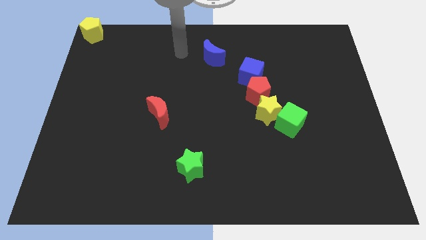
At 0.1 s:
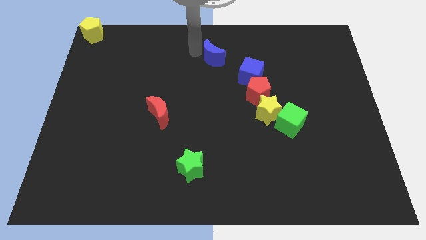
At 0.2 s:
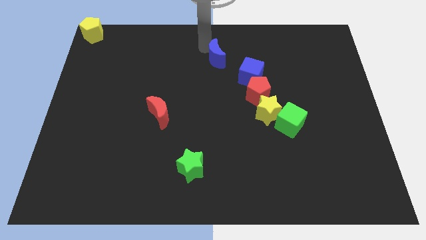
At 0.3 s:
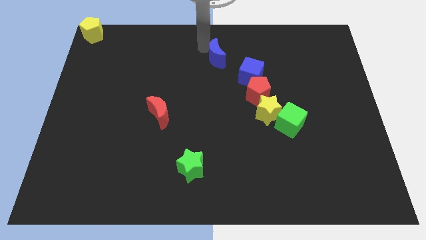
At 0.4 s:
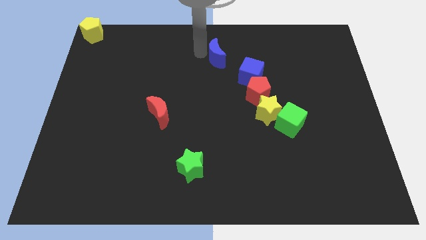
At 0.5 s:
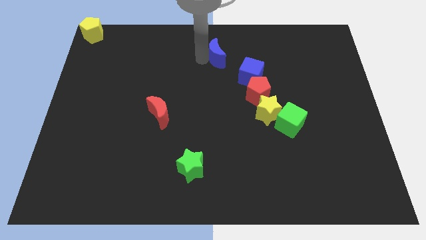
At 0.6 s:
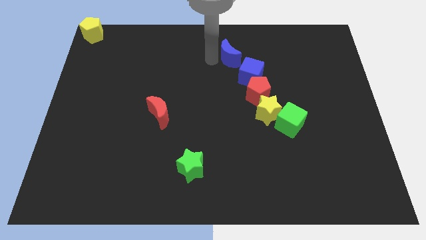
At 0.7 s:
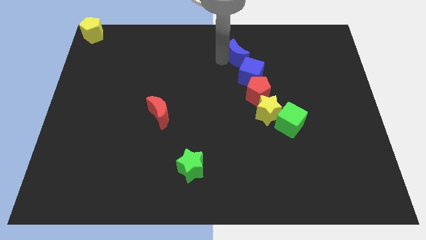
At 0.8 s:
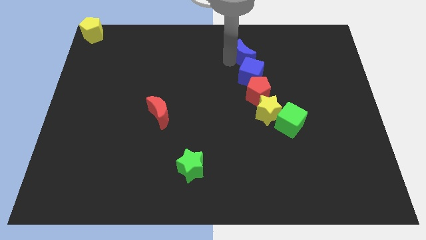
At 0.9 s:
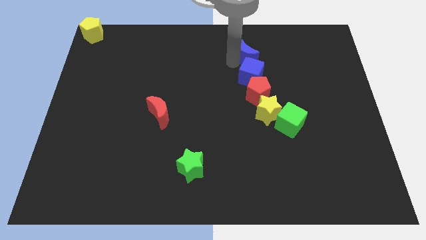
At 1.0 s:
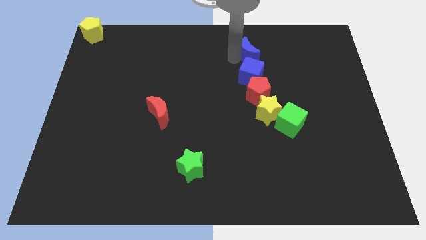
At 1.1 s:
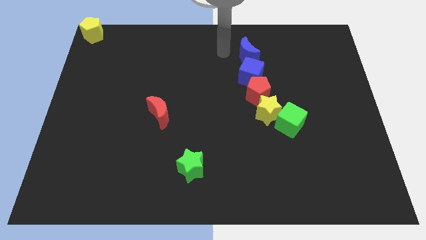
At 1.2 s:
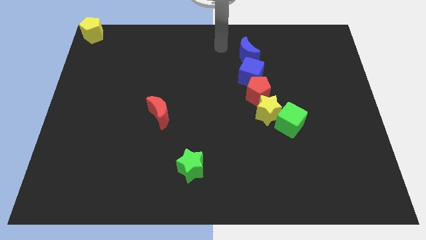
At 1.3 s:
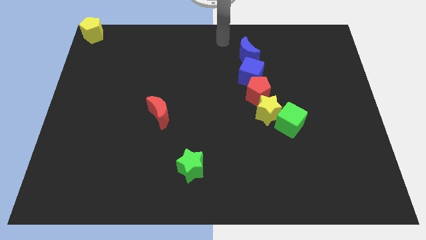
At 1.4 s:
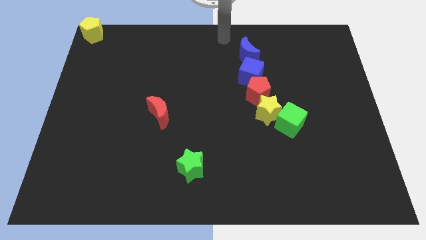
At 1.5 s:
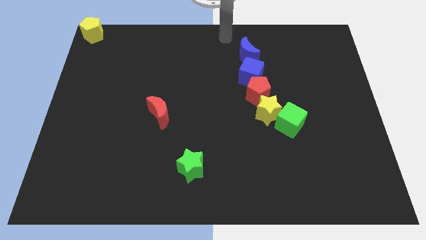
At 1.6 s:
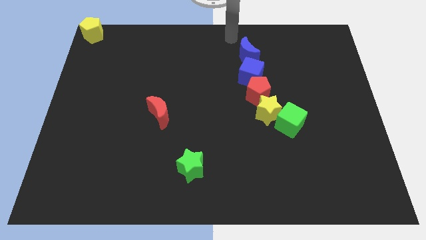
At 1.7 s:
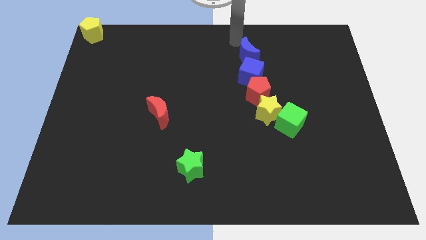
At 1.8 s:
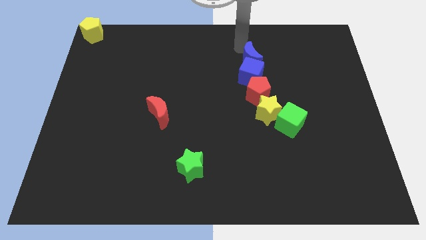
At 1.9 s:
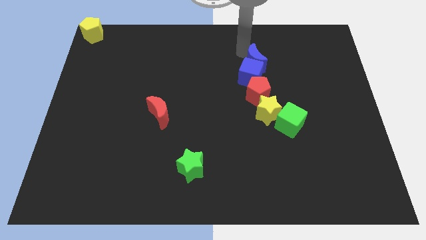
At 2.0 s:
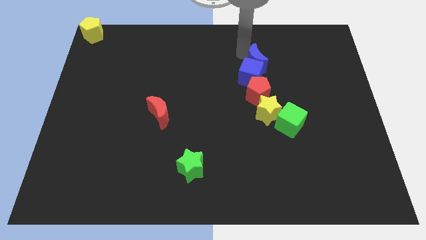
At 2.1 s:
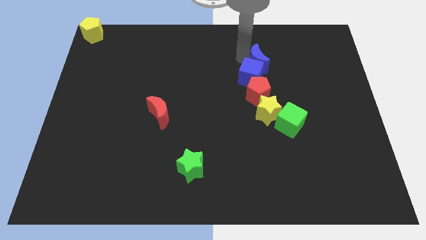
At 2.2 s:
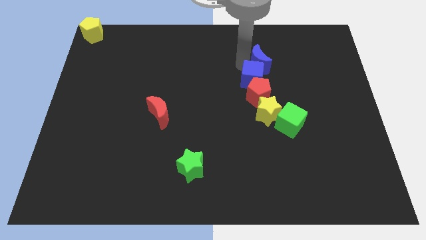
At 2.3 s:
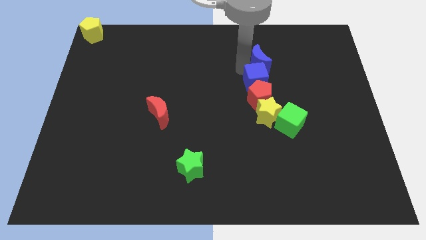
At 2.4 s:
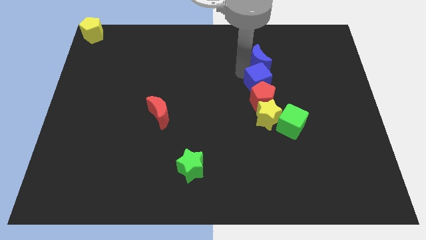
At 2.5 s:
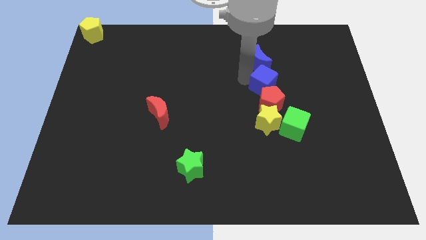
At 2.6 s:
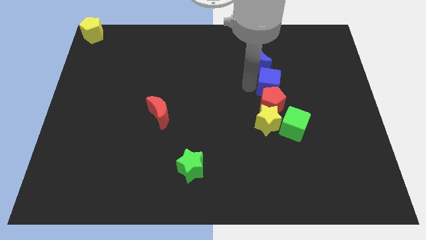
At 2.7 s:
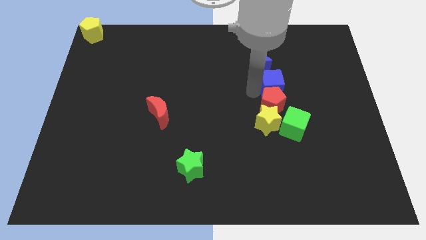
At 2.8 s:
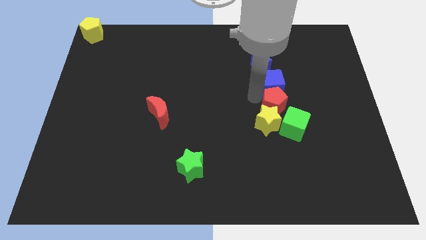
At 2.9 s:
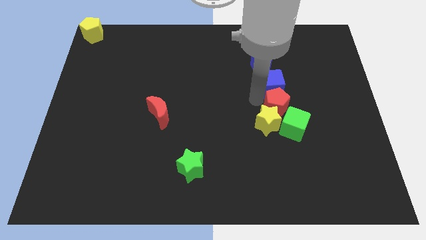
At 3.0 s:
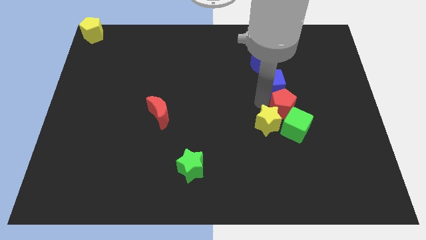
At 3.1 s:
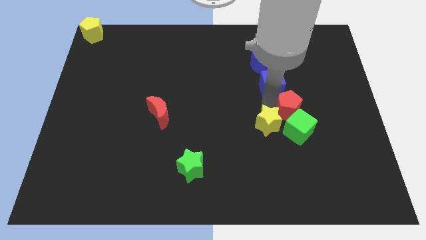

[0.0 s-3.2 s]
push blue crescent in blue cube

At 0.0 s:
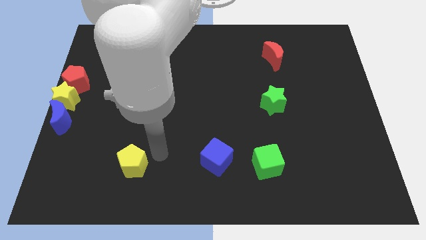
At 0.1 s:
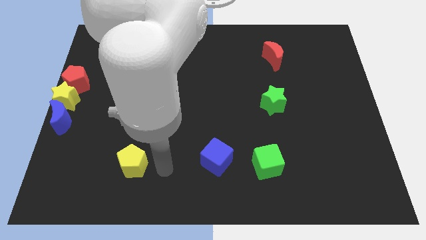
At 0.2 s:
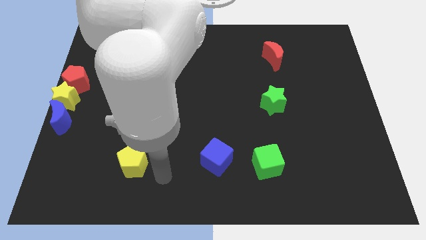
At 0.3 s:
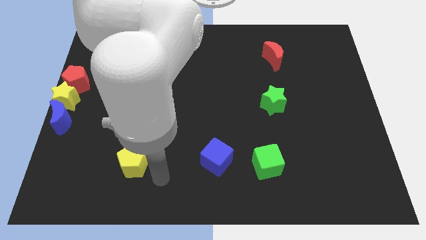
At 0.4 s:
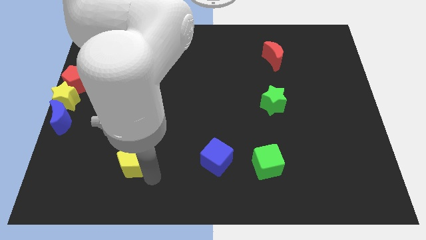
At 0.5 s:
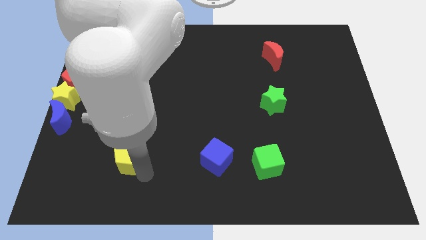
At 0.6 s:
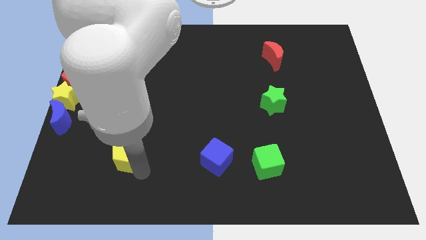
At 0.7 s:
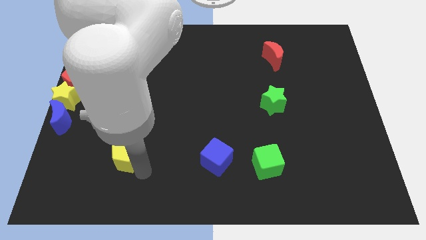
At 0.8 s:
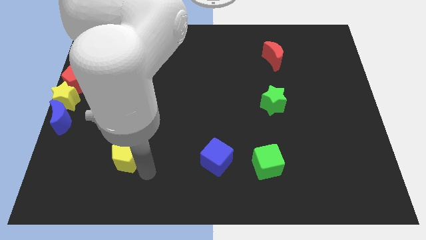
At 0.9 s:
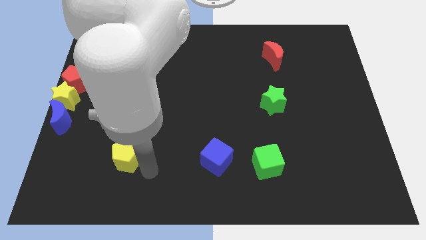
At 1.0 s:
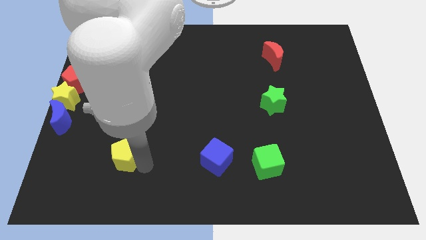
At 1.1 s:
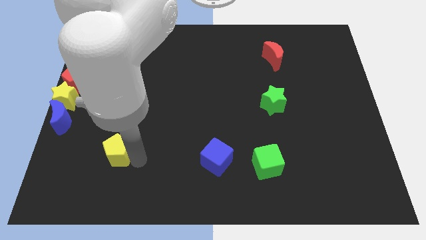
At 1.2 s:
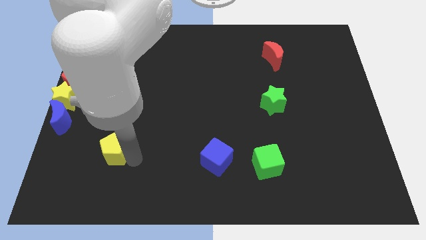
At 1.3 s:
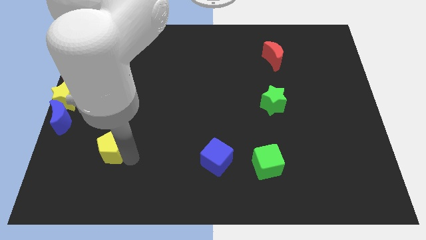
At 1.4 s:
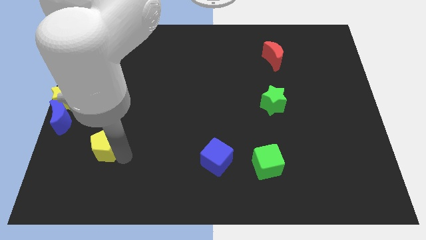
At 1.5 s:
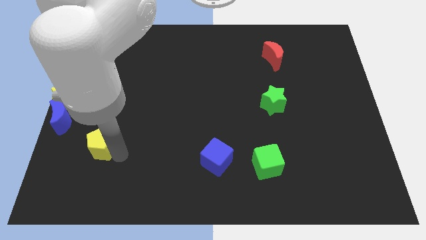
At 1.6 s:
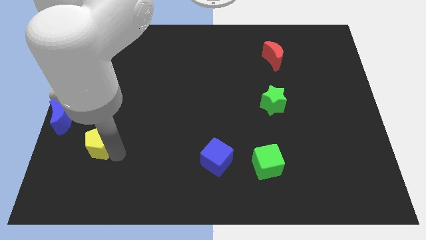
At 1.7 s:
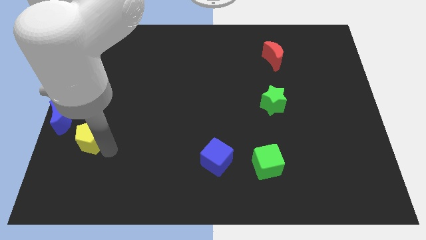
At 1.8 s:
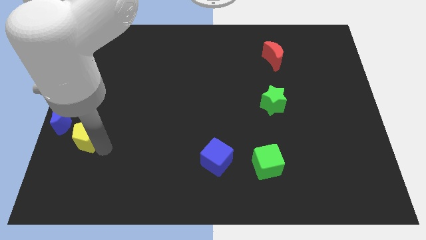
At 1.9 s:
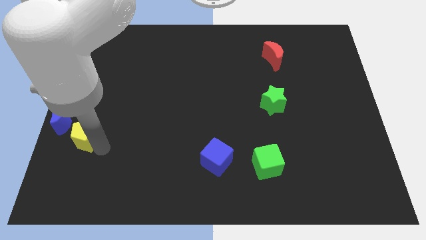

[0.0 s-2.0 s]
slide the yellow pentagon to the left

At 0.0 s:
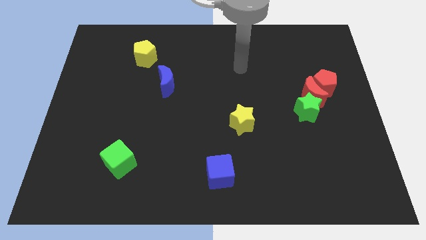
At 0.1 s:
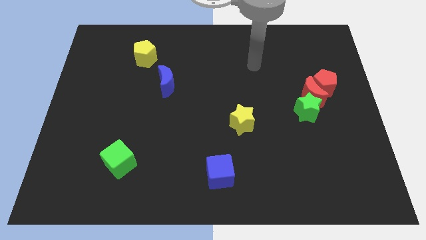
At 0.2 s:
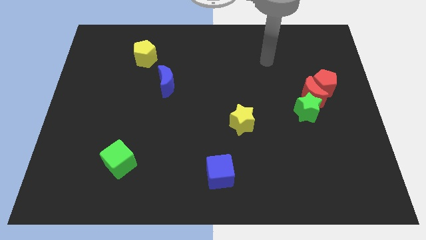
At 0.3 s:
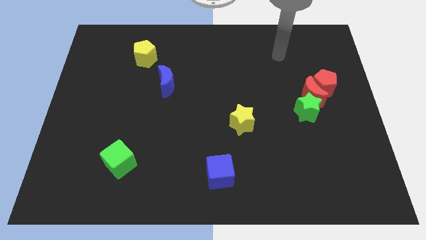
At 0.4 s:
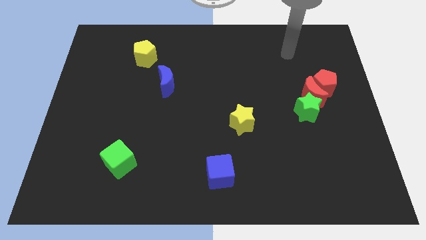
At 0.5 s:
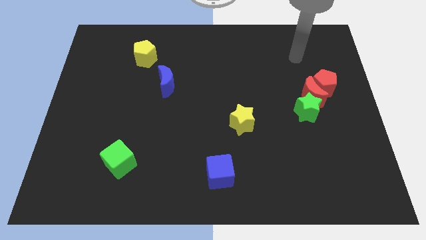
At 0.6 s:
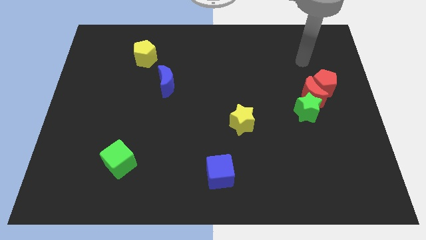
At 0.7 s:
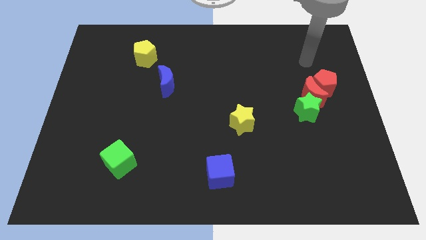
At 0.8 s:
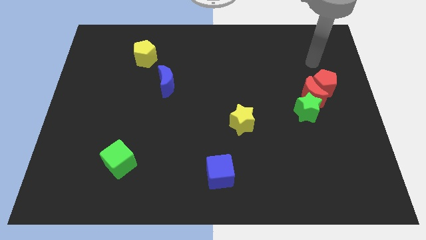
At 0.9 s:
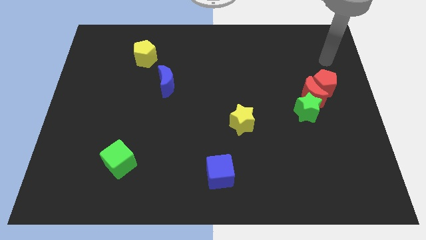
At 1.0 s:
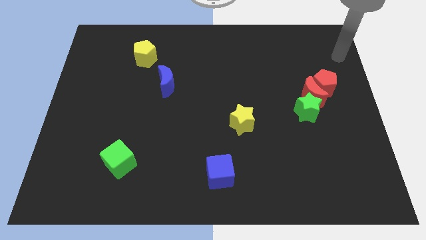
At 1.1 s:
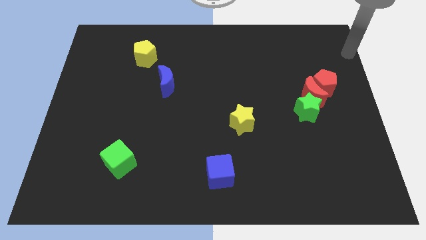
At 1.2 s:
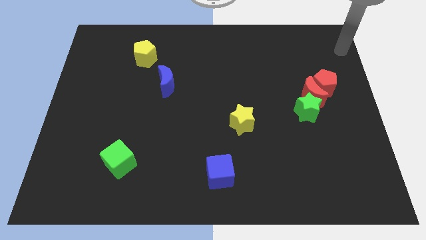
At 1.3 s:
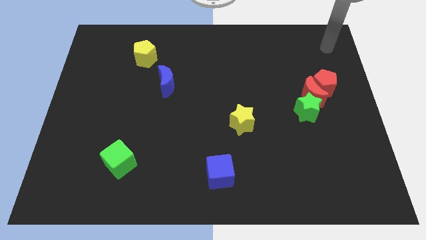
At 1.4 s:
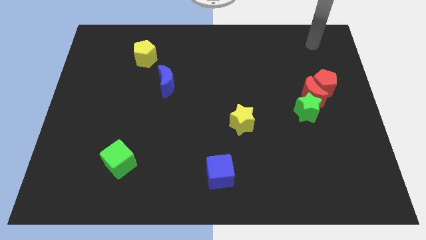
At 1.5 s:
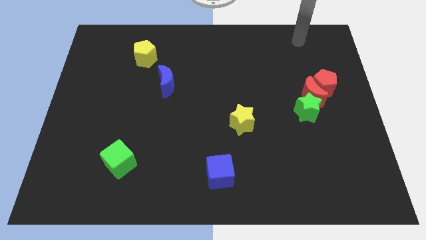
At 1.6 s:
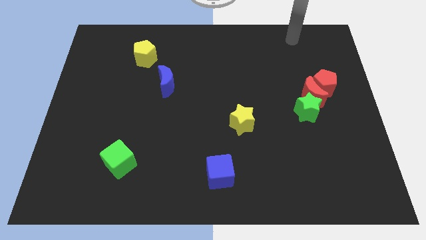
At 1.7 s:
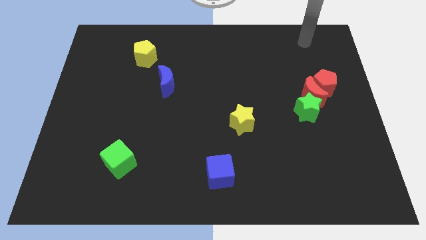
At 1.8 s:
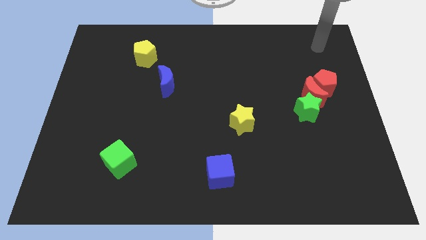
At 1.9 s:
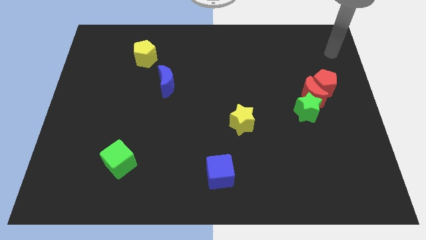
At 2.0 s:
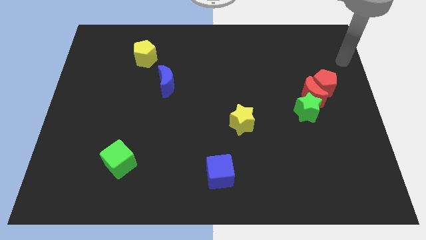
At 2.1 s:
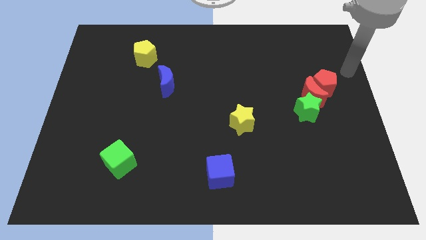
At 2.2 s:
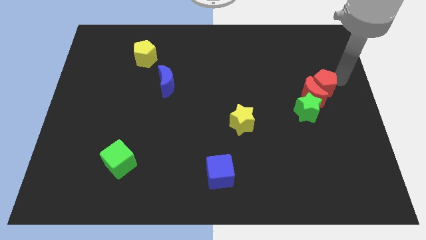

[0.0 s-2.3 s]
place arm close to the red pentagon

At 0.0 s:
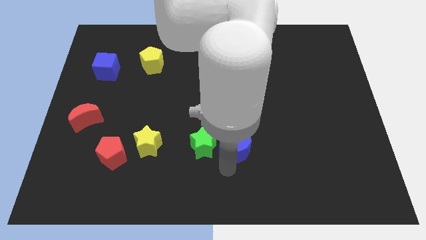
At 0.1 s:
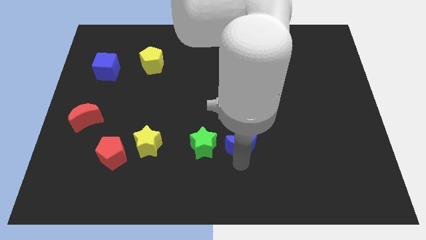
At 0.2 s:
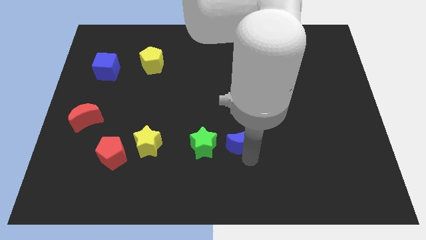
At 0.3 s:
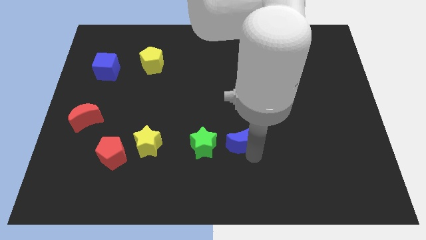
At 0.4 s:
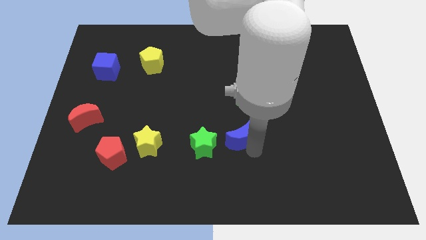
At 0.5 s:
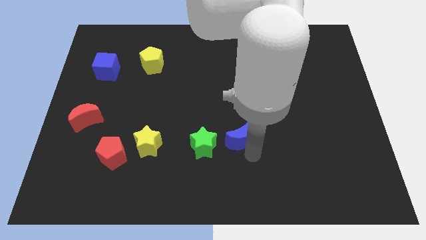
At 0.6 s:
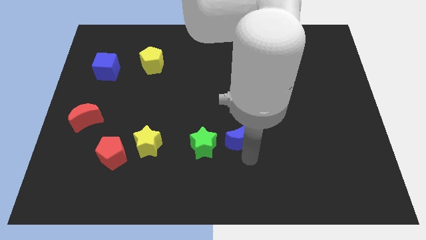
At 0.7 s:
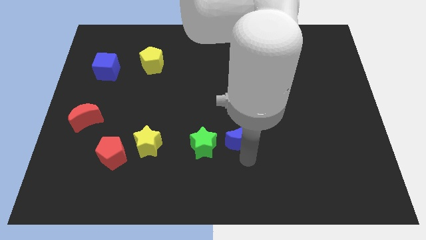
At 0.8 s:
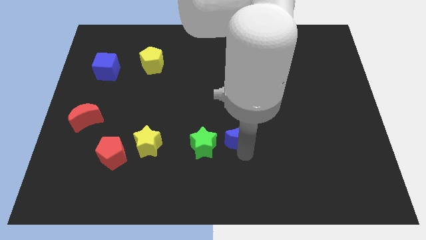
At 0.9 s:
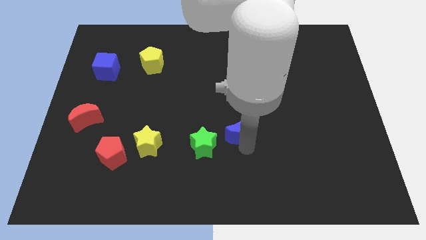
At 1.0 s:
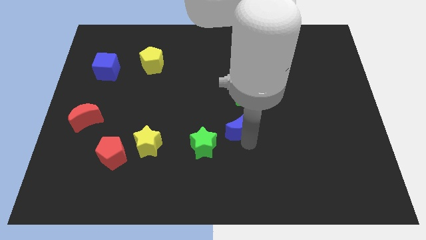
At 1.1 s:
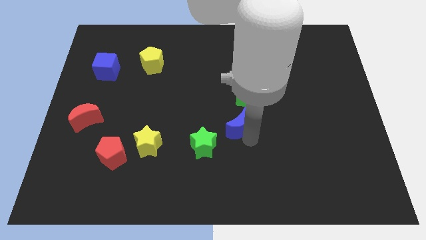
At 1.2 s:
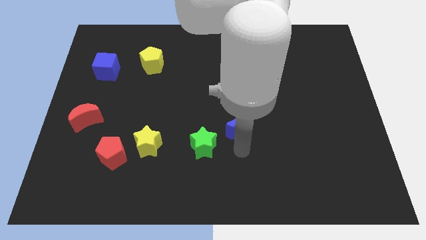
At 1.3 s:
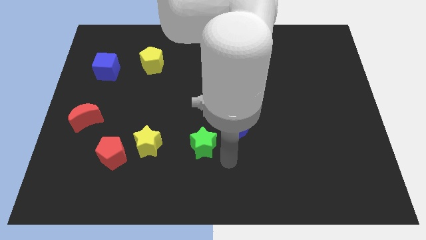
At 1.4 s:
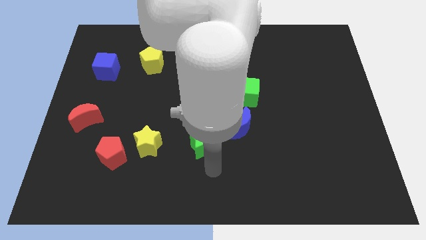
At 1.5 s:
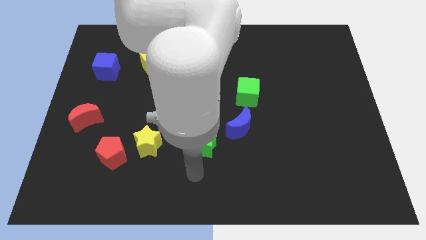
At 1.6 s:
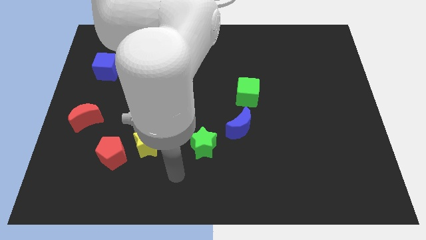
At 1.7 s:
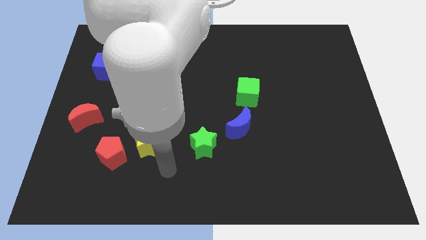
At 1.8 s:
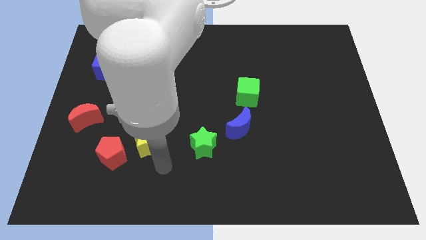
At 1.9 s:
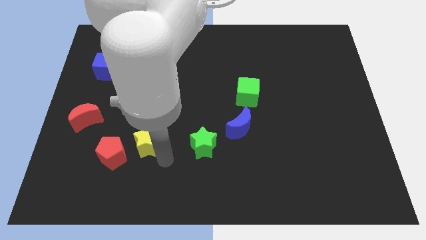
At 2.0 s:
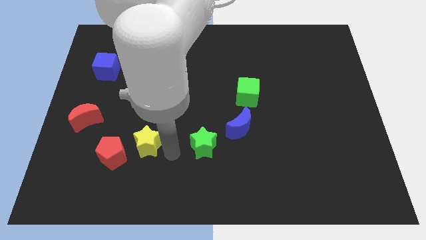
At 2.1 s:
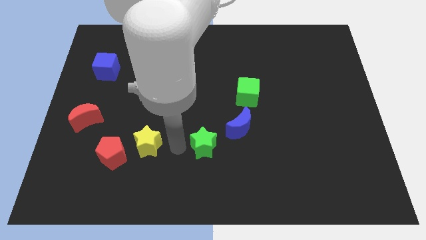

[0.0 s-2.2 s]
place the arm between the yellow star and green star
